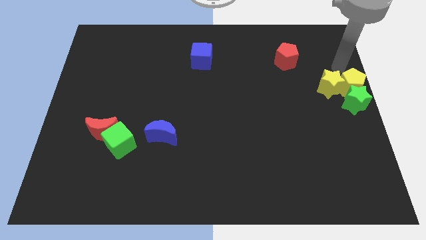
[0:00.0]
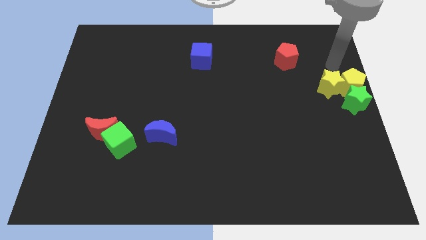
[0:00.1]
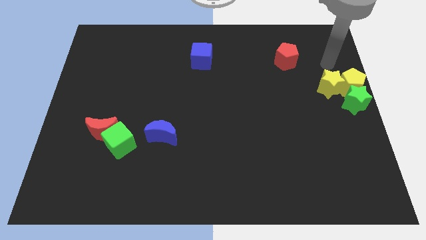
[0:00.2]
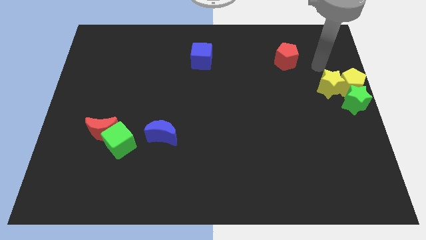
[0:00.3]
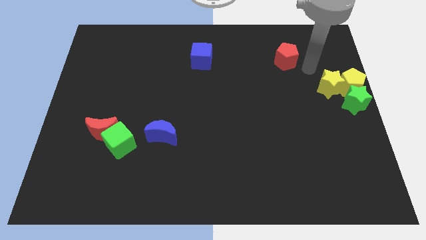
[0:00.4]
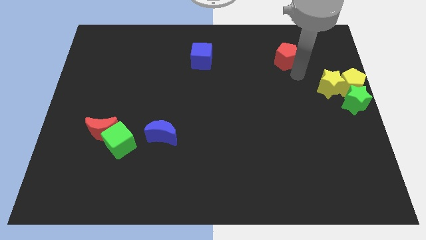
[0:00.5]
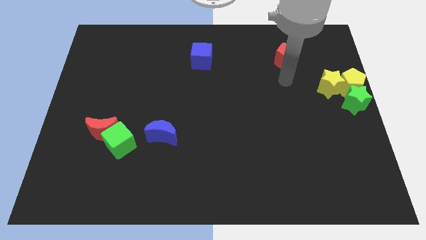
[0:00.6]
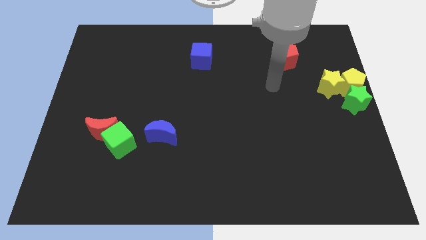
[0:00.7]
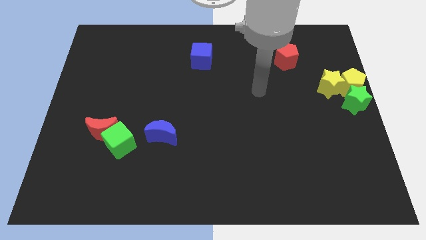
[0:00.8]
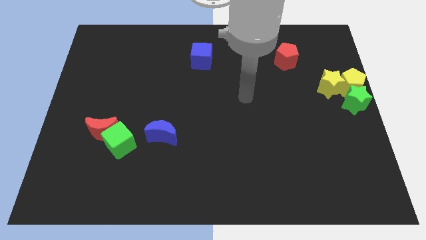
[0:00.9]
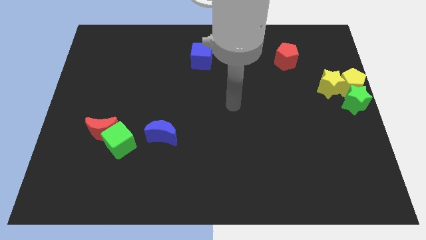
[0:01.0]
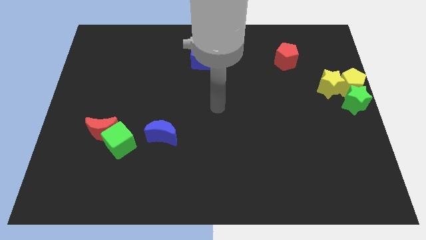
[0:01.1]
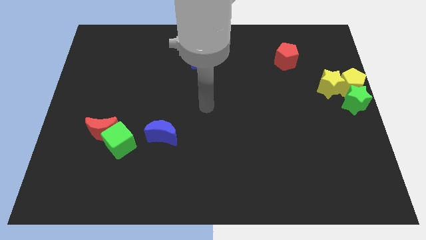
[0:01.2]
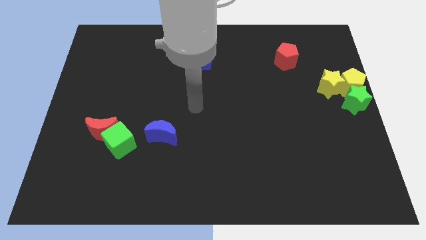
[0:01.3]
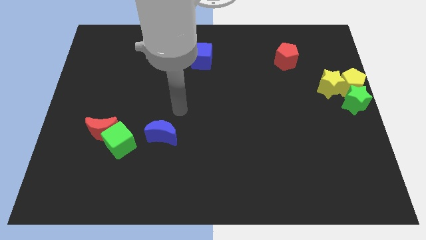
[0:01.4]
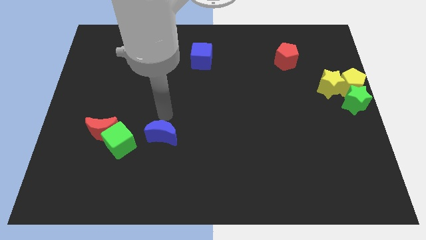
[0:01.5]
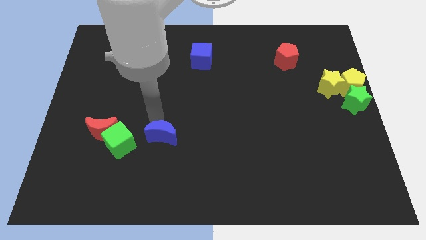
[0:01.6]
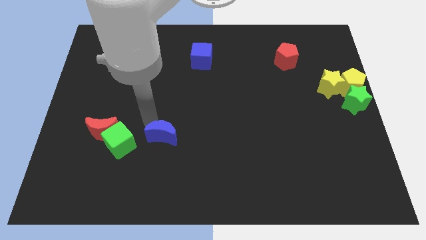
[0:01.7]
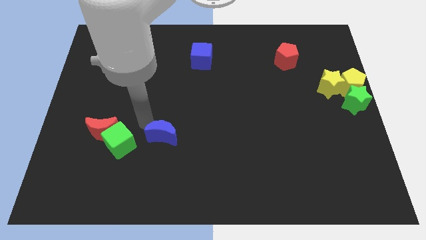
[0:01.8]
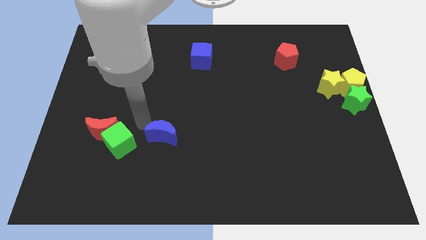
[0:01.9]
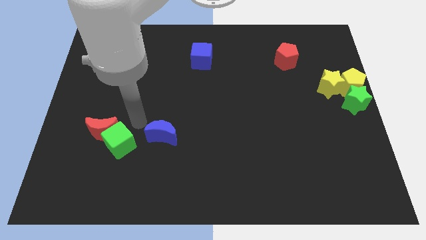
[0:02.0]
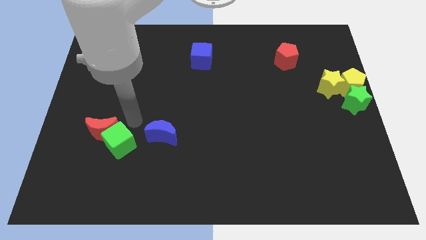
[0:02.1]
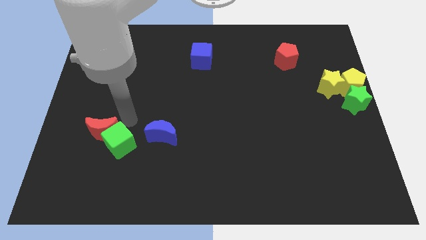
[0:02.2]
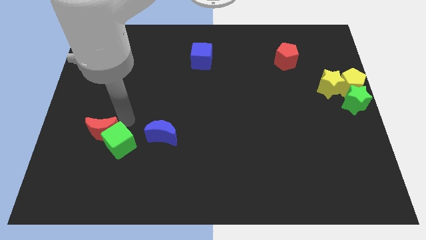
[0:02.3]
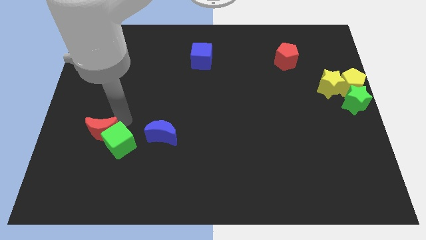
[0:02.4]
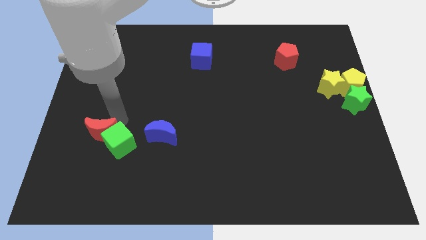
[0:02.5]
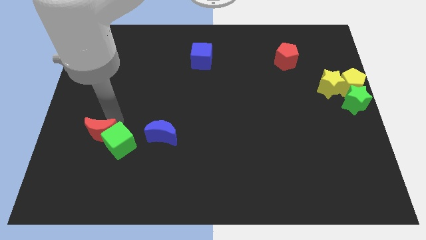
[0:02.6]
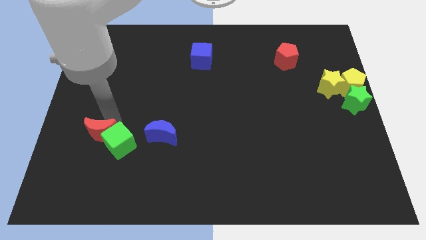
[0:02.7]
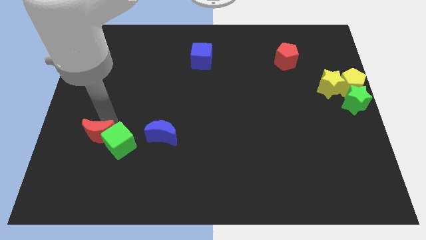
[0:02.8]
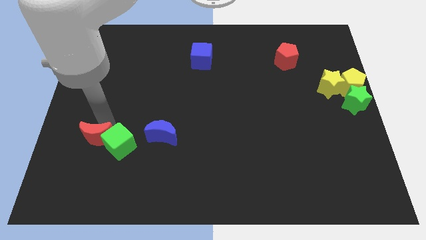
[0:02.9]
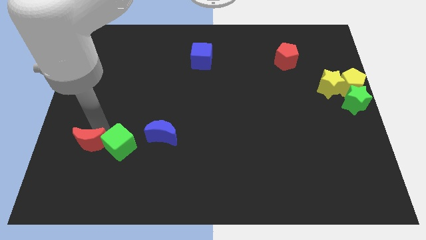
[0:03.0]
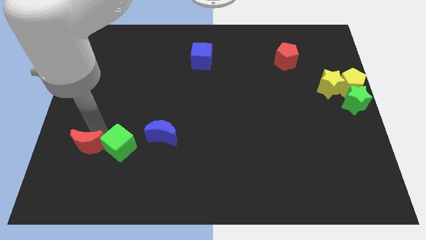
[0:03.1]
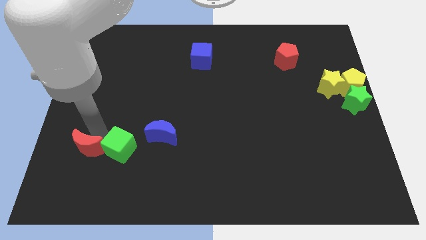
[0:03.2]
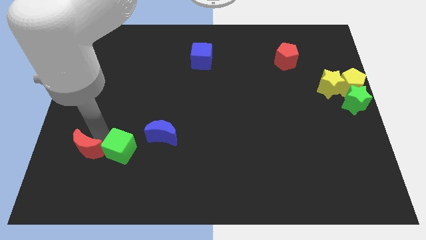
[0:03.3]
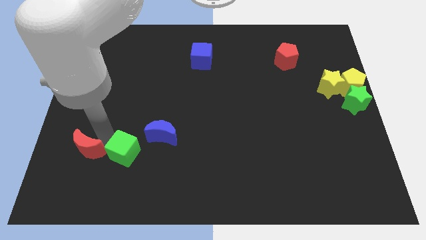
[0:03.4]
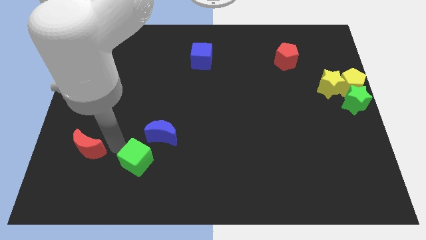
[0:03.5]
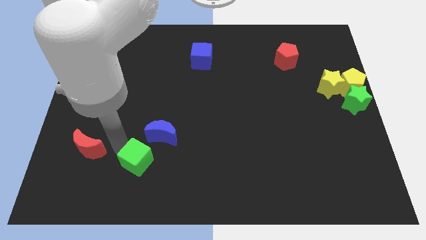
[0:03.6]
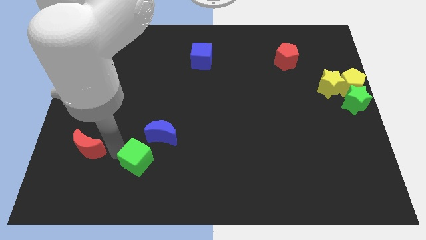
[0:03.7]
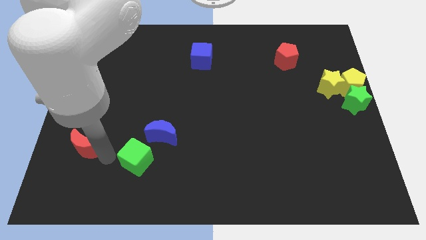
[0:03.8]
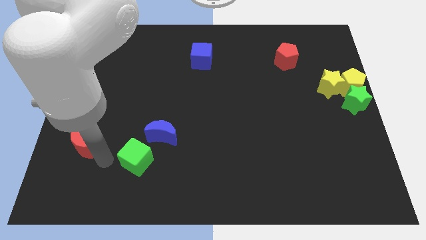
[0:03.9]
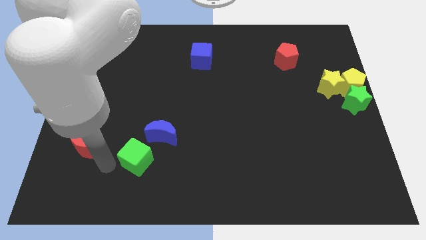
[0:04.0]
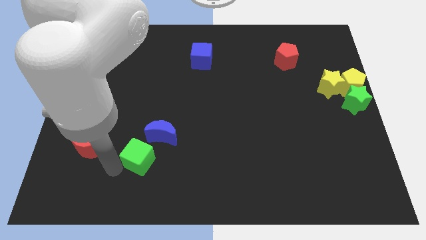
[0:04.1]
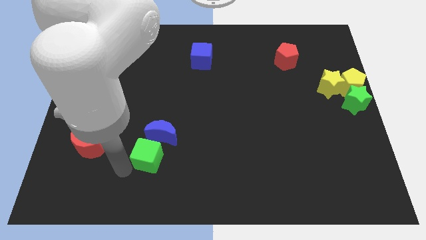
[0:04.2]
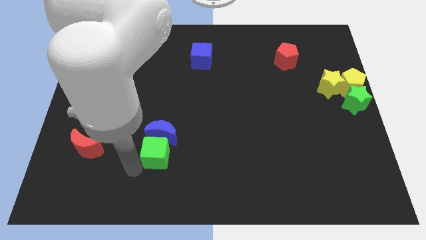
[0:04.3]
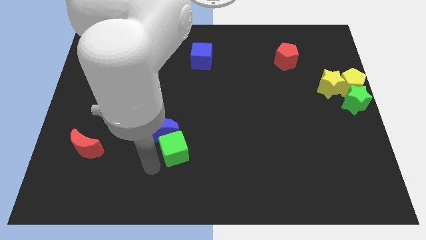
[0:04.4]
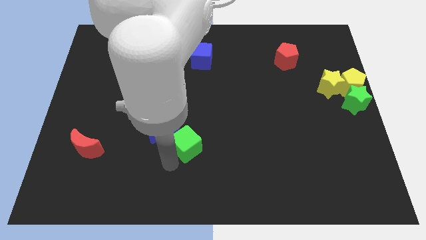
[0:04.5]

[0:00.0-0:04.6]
separate the red moon and the green cube

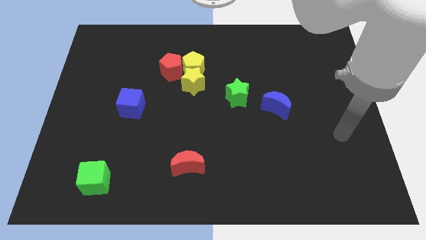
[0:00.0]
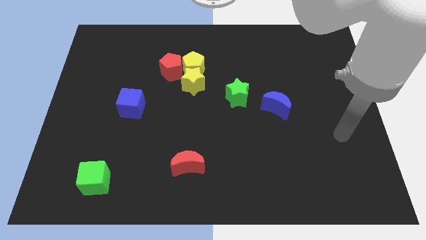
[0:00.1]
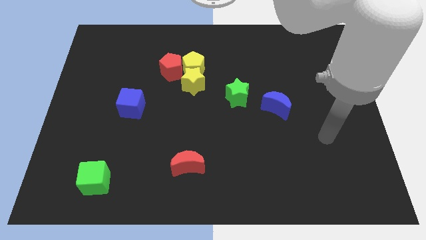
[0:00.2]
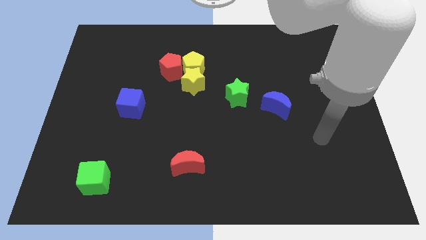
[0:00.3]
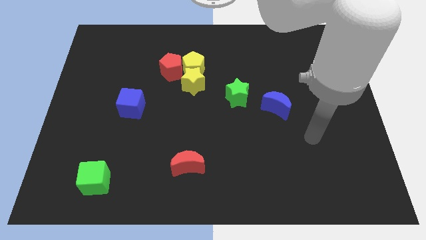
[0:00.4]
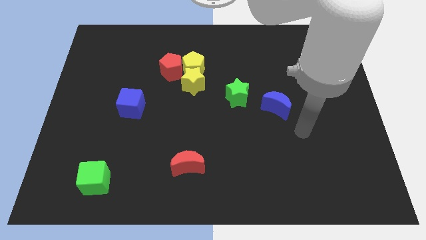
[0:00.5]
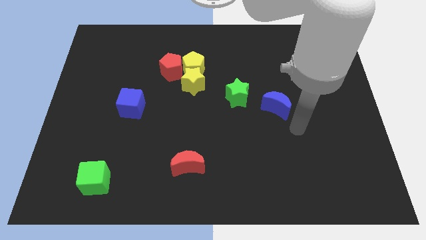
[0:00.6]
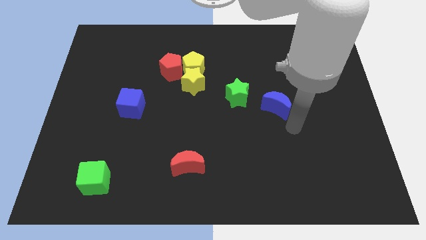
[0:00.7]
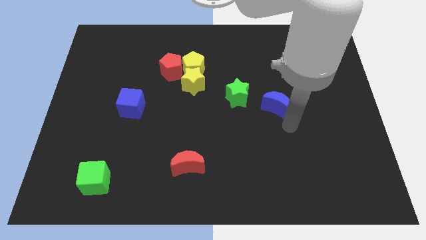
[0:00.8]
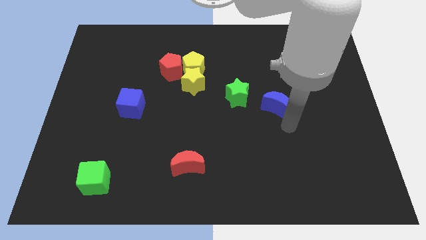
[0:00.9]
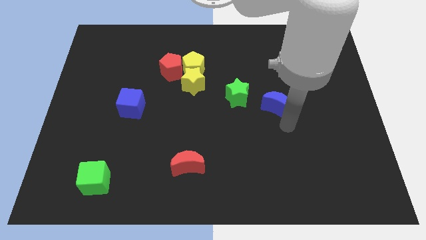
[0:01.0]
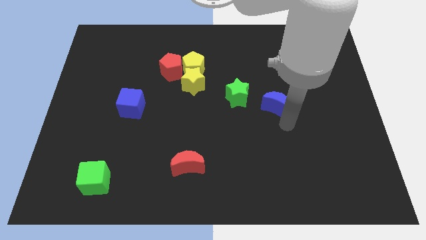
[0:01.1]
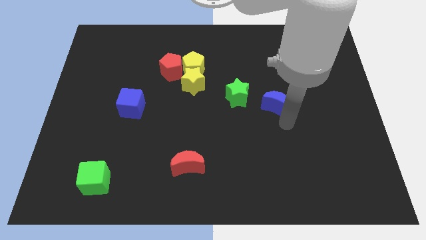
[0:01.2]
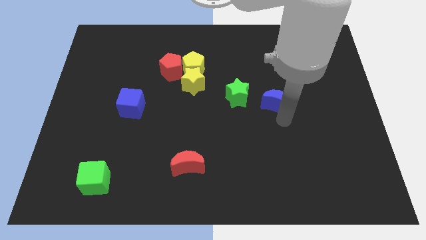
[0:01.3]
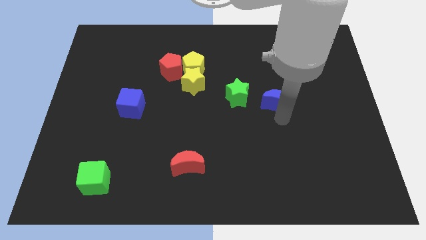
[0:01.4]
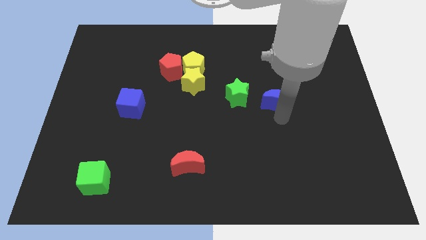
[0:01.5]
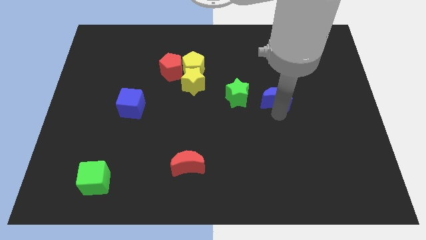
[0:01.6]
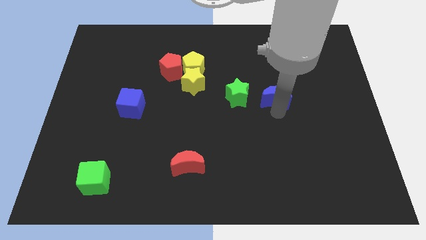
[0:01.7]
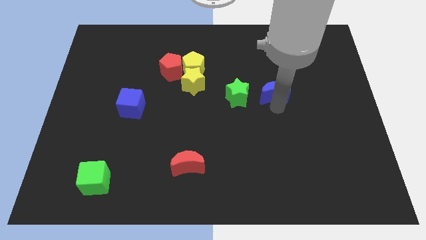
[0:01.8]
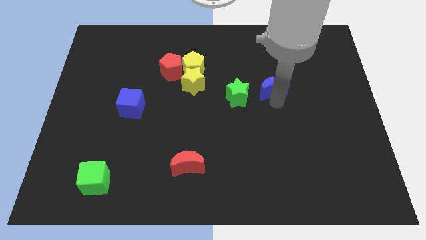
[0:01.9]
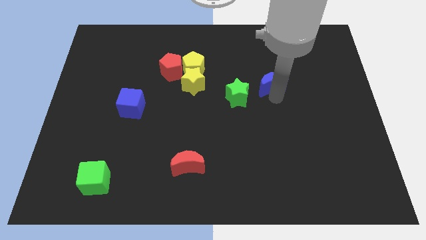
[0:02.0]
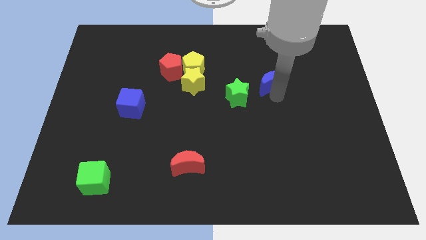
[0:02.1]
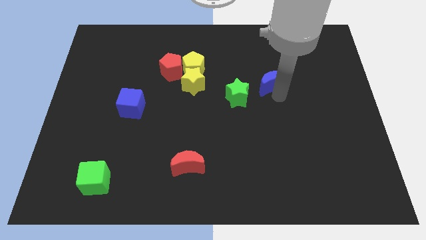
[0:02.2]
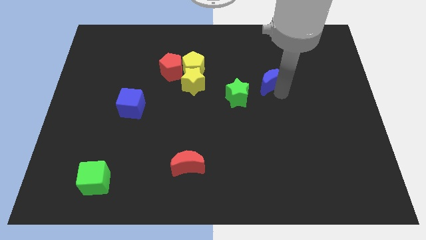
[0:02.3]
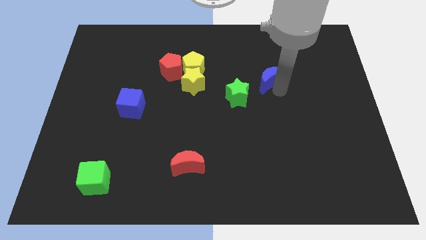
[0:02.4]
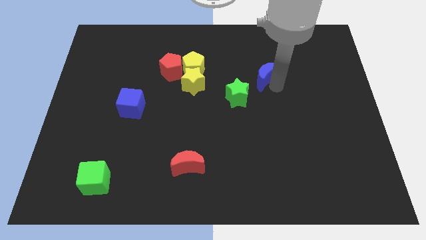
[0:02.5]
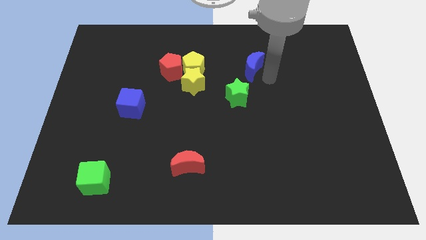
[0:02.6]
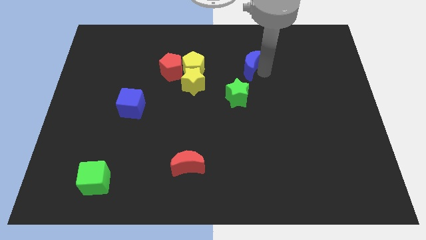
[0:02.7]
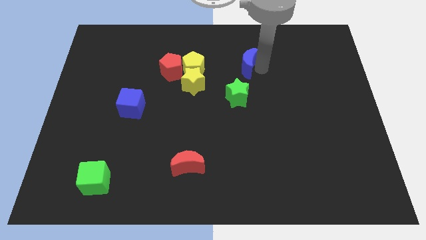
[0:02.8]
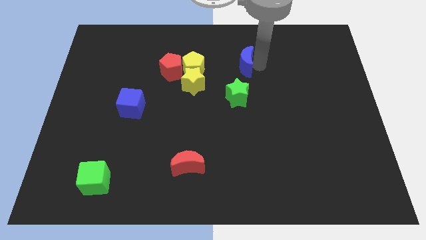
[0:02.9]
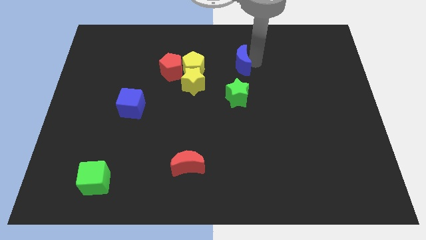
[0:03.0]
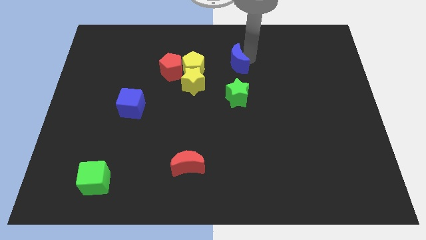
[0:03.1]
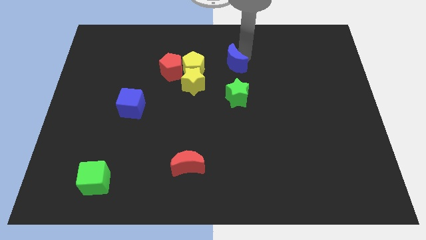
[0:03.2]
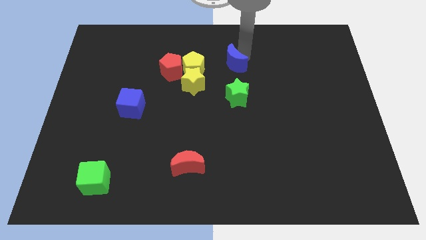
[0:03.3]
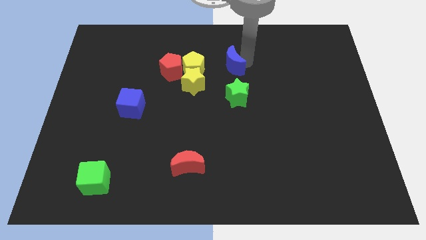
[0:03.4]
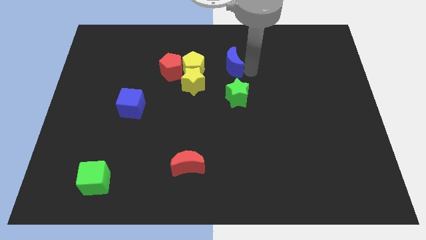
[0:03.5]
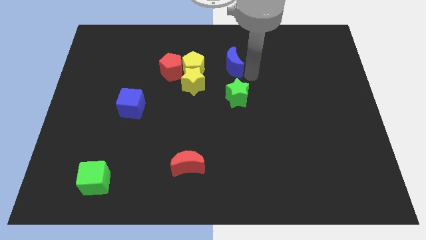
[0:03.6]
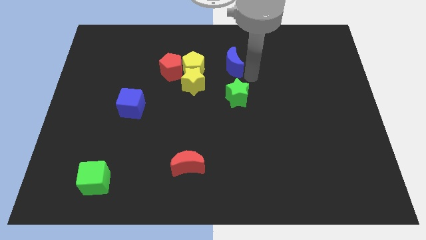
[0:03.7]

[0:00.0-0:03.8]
place the blue moon top of the green star

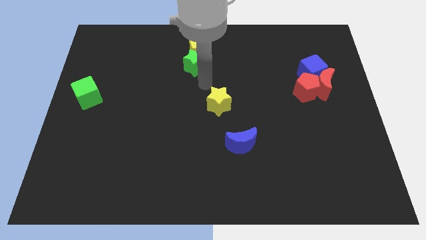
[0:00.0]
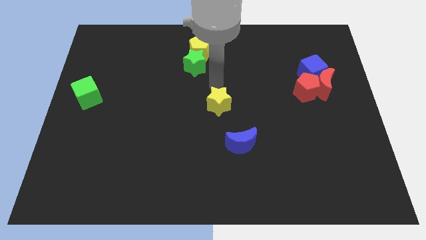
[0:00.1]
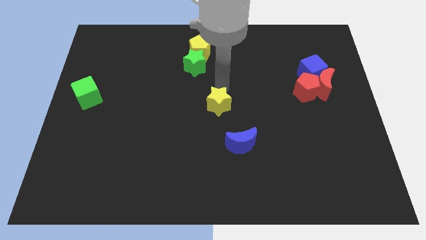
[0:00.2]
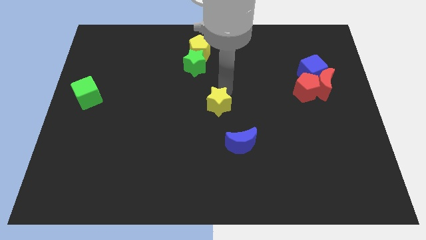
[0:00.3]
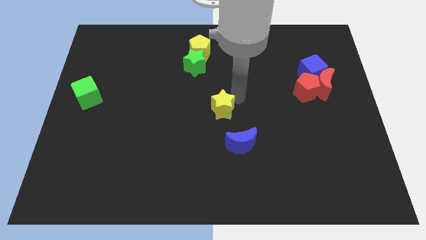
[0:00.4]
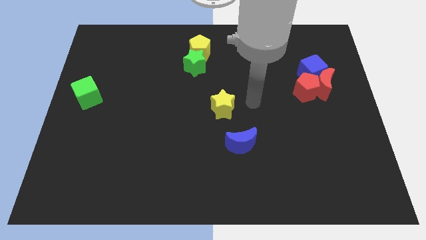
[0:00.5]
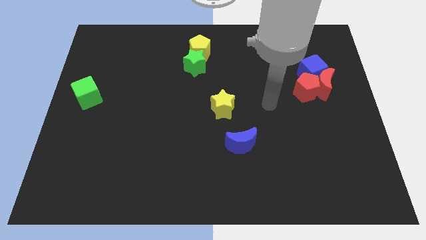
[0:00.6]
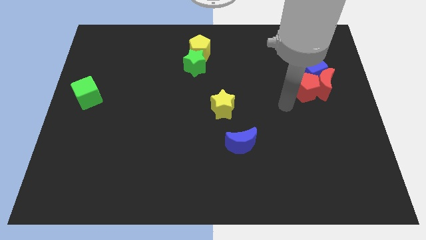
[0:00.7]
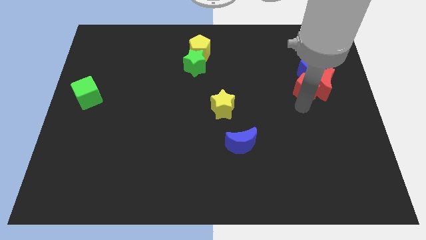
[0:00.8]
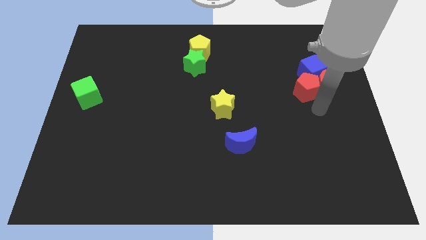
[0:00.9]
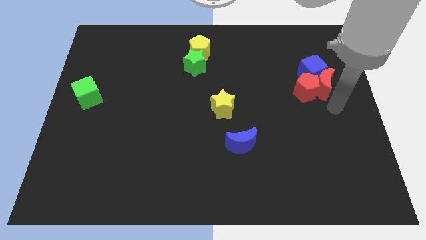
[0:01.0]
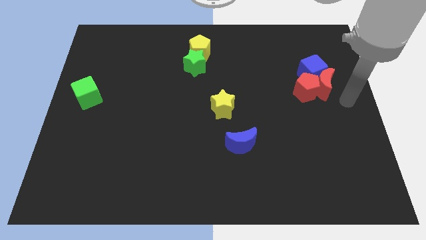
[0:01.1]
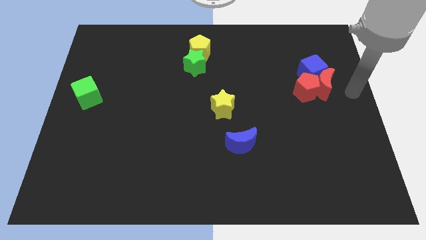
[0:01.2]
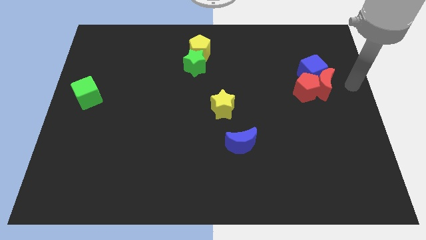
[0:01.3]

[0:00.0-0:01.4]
touch the yellow star
